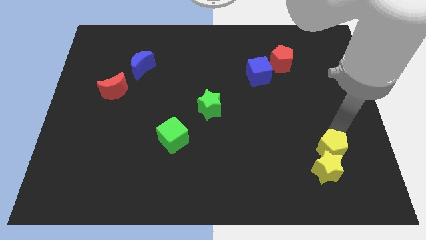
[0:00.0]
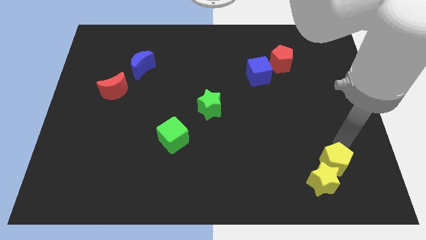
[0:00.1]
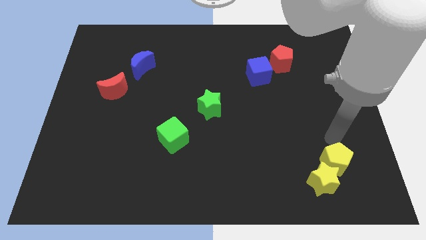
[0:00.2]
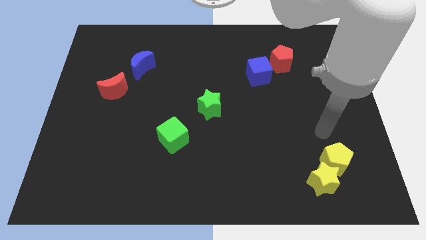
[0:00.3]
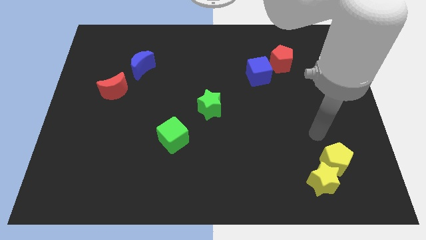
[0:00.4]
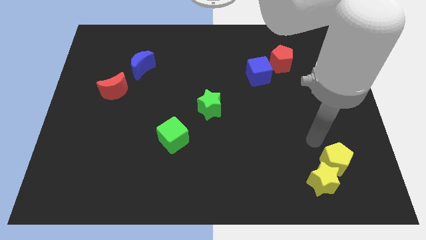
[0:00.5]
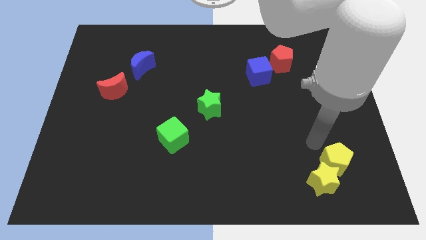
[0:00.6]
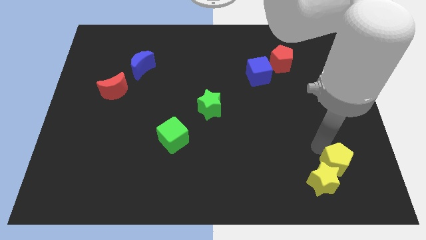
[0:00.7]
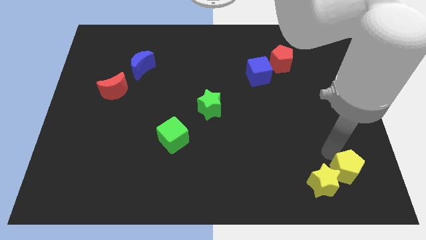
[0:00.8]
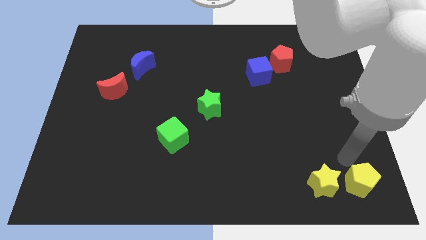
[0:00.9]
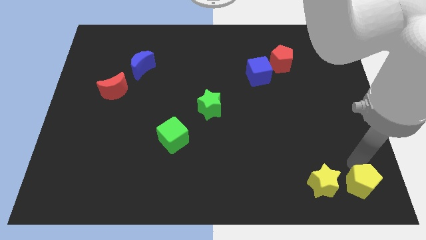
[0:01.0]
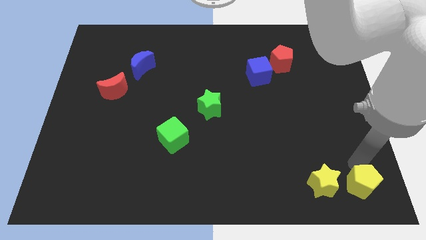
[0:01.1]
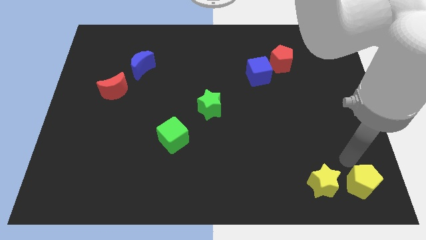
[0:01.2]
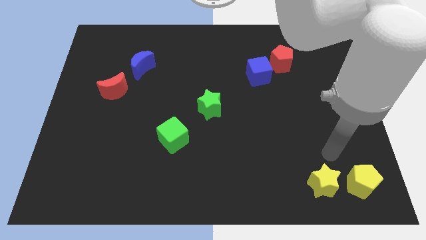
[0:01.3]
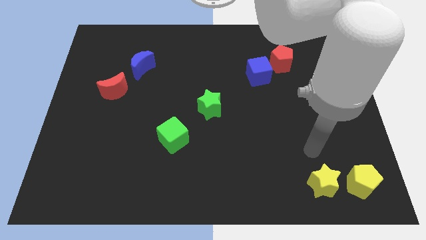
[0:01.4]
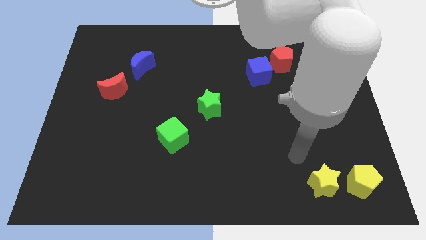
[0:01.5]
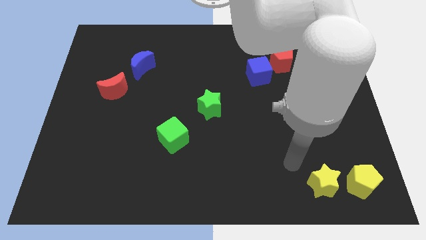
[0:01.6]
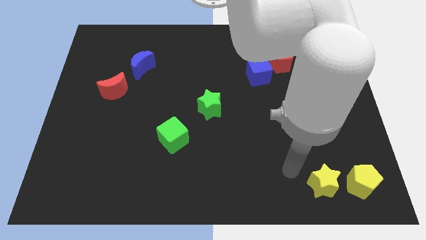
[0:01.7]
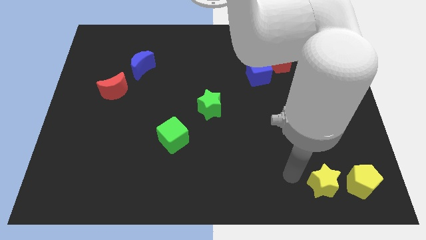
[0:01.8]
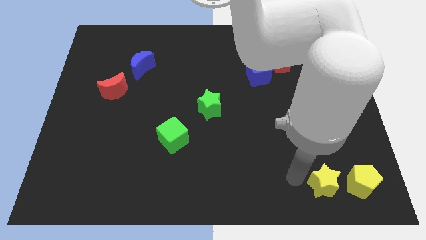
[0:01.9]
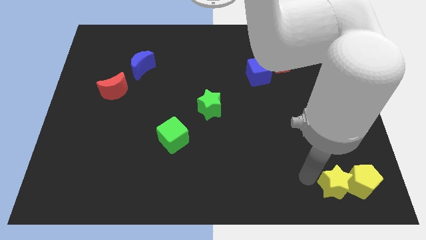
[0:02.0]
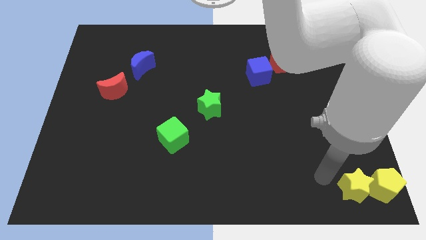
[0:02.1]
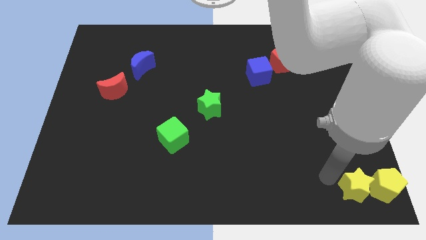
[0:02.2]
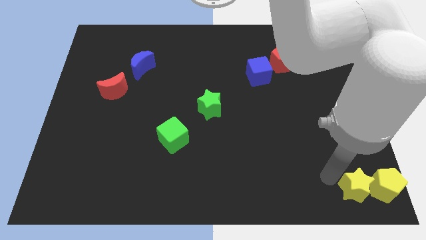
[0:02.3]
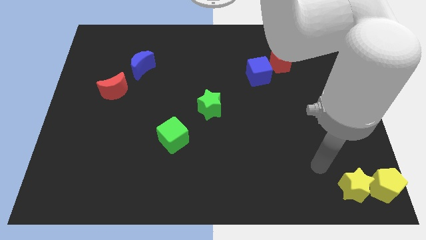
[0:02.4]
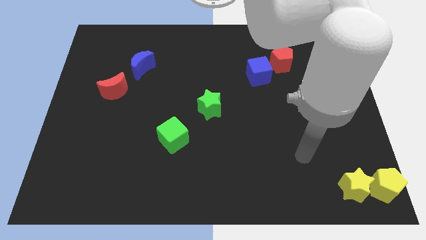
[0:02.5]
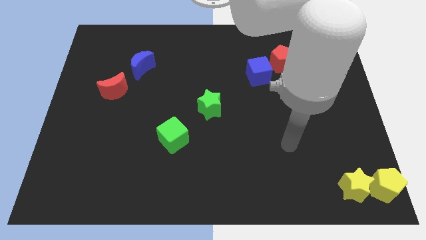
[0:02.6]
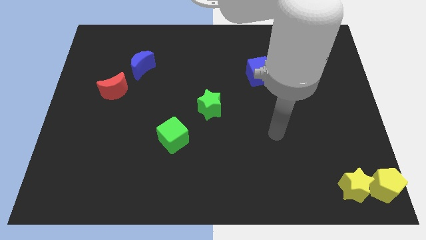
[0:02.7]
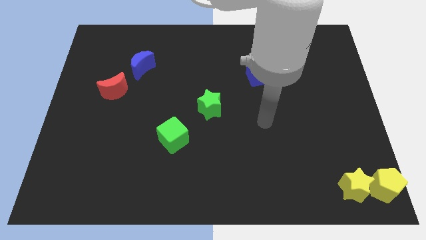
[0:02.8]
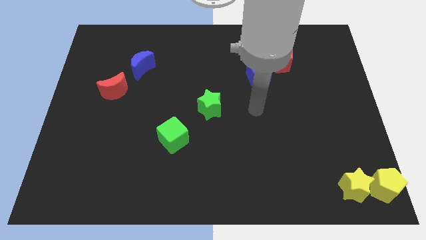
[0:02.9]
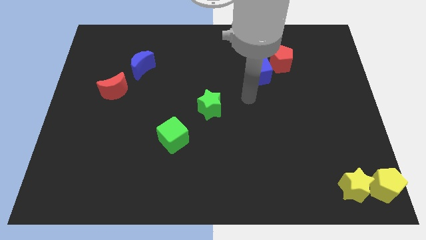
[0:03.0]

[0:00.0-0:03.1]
move the yellow blocks to the bottom right of the board

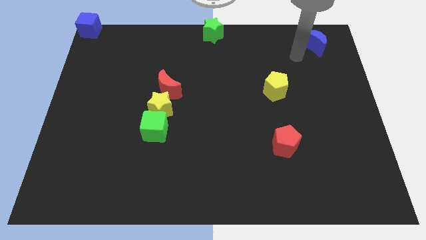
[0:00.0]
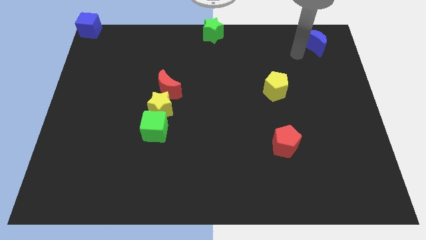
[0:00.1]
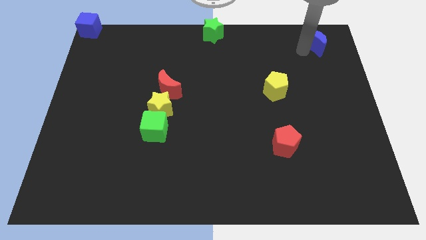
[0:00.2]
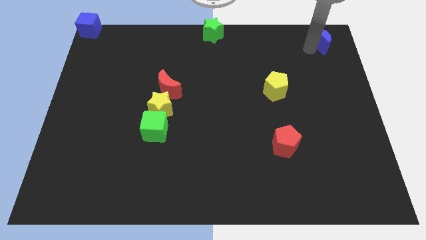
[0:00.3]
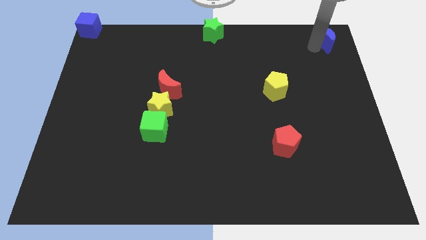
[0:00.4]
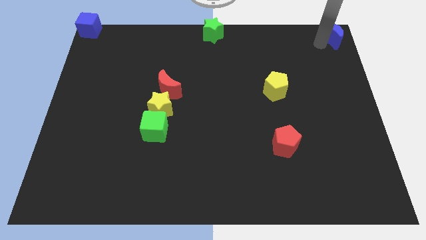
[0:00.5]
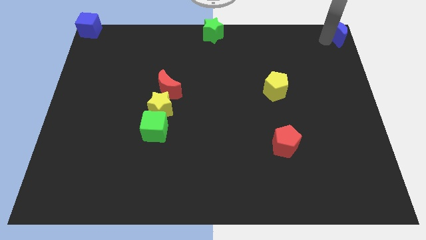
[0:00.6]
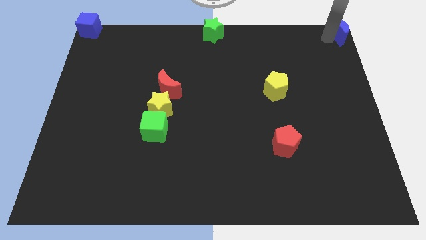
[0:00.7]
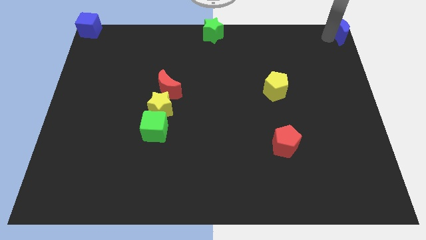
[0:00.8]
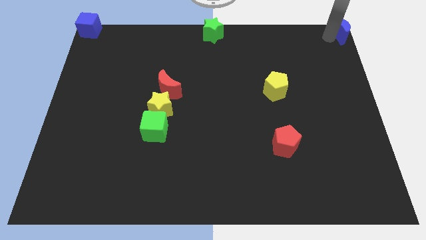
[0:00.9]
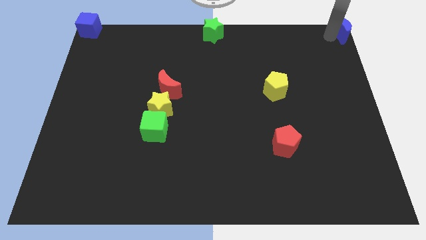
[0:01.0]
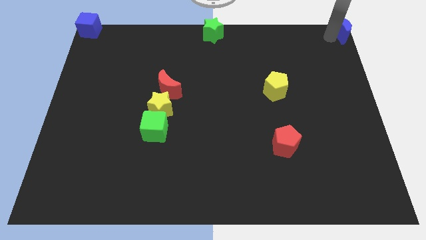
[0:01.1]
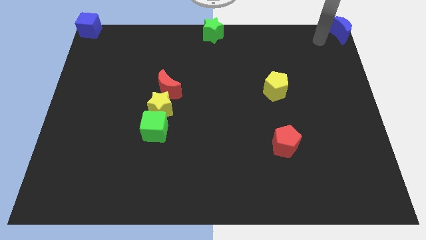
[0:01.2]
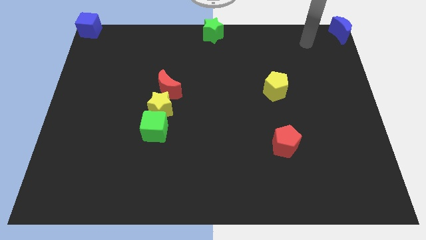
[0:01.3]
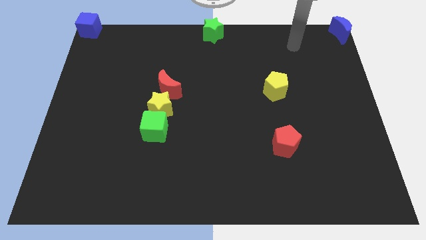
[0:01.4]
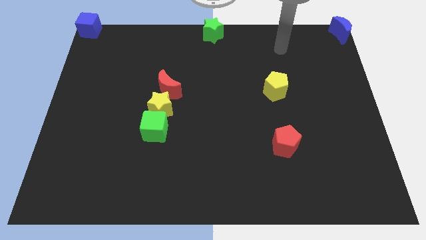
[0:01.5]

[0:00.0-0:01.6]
push the blue crescent to the top right corner of the board

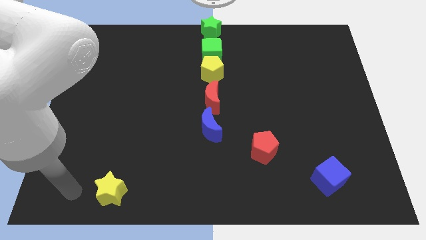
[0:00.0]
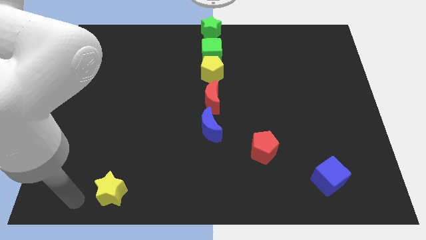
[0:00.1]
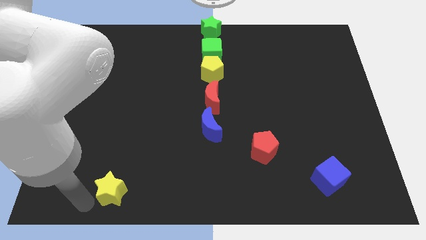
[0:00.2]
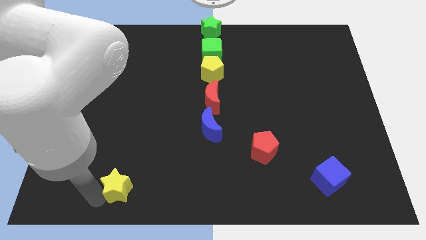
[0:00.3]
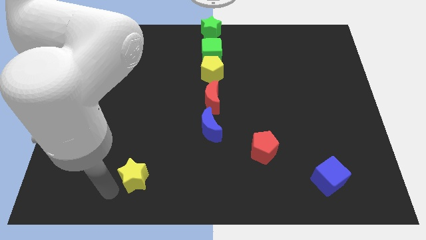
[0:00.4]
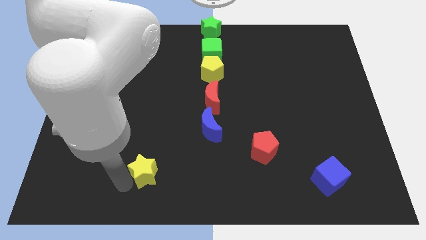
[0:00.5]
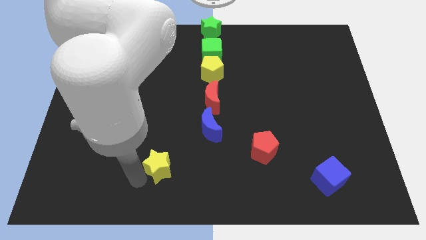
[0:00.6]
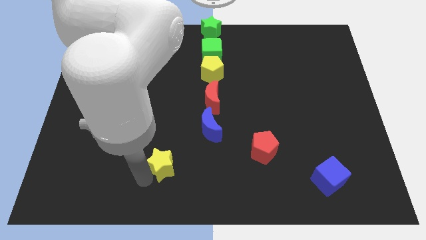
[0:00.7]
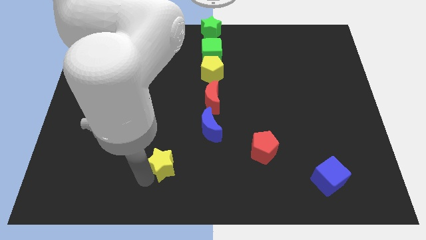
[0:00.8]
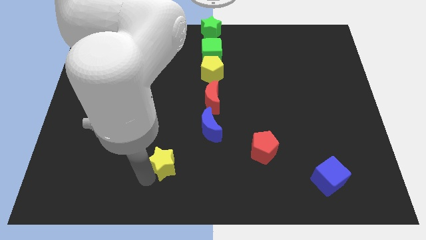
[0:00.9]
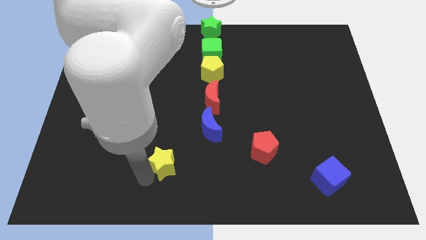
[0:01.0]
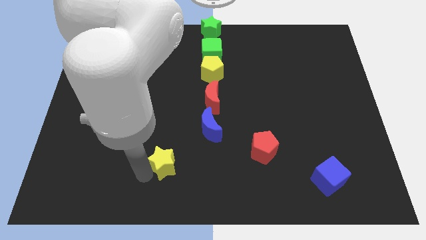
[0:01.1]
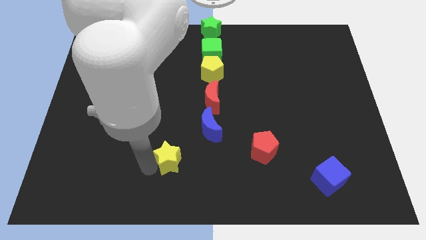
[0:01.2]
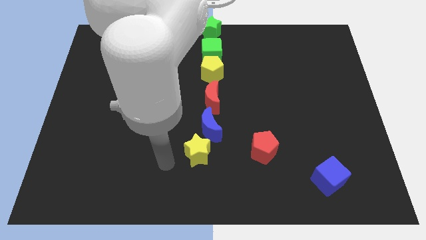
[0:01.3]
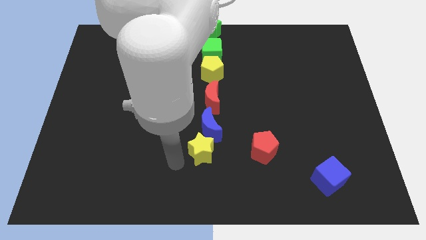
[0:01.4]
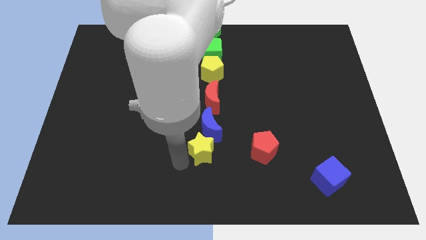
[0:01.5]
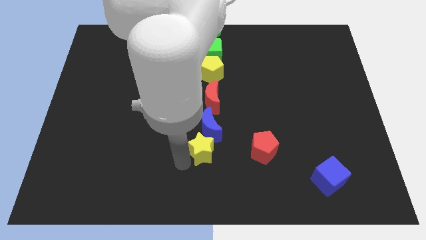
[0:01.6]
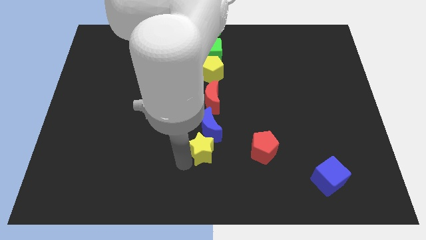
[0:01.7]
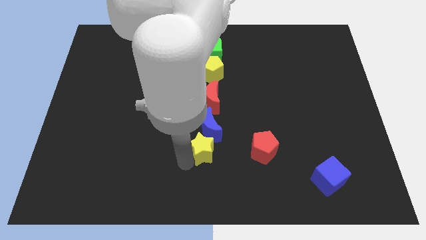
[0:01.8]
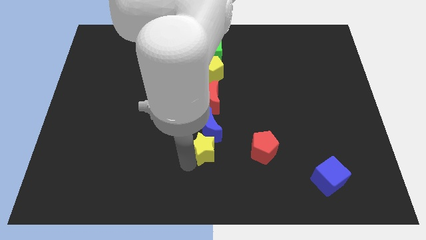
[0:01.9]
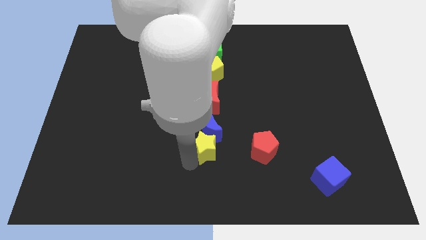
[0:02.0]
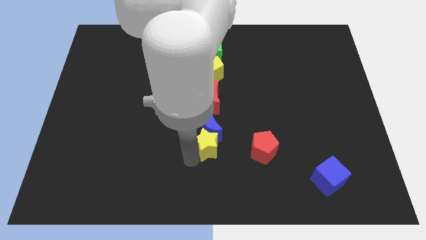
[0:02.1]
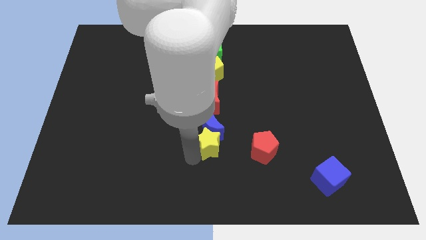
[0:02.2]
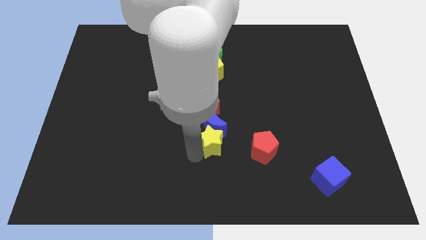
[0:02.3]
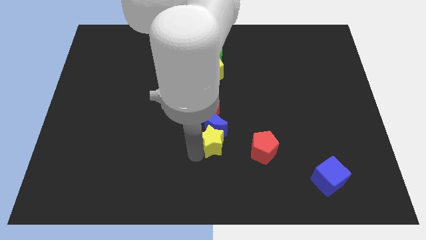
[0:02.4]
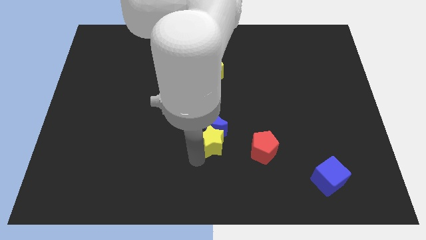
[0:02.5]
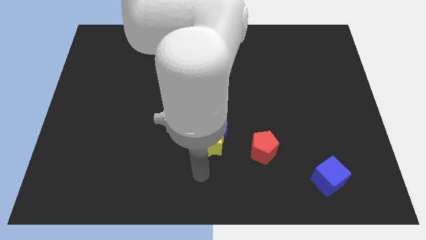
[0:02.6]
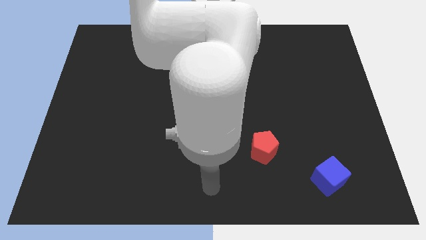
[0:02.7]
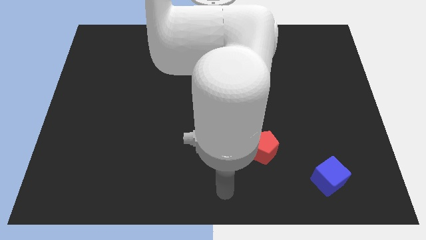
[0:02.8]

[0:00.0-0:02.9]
move the yellow star into the blue moon at the bottom

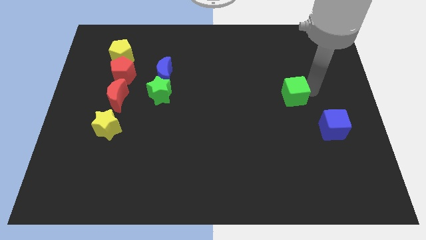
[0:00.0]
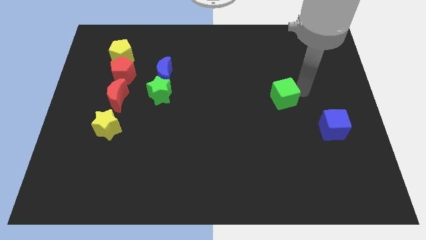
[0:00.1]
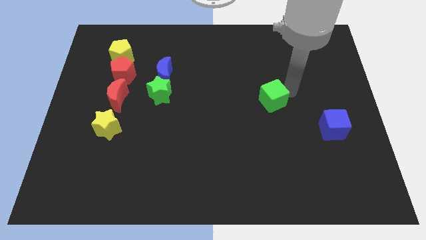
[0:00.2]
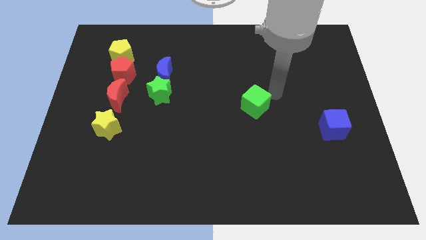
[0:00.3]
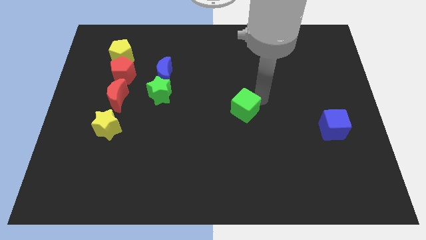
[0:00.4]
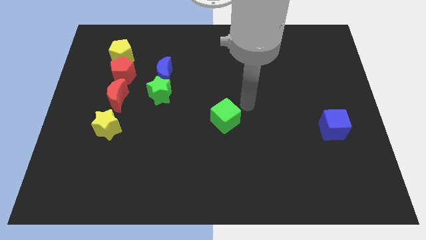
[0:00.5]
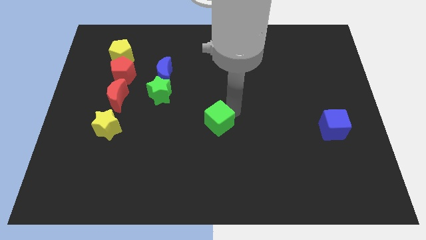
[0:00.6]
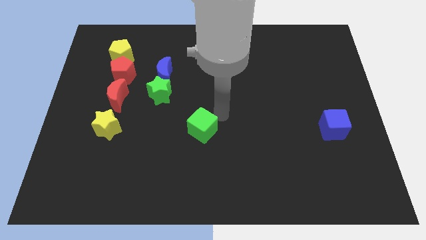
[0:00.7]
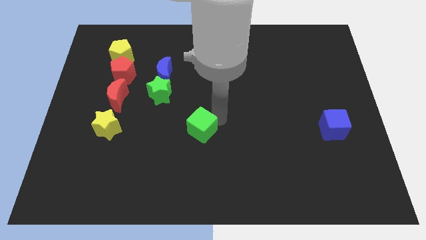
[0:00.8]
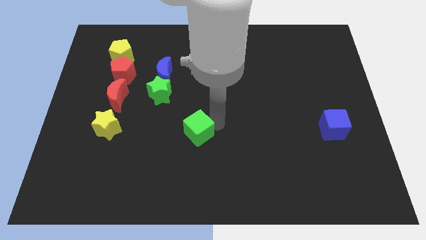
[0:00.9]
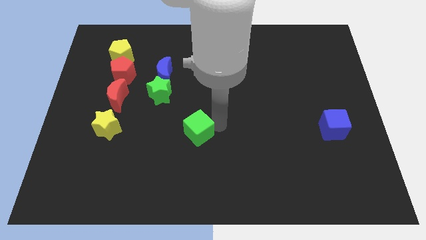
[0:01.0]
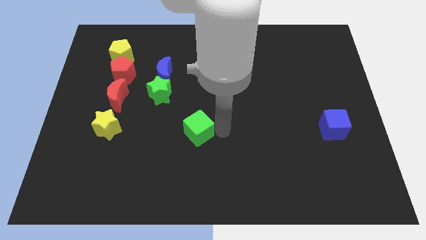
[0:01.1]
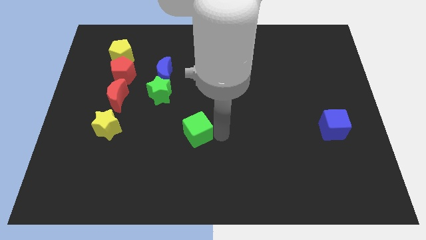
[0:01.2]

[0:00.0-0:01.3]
move green cube slightly to the left side of the board
